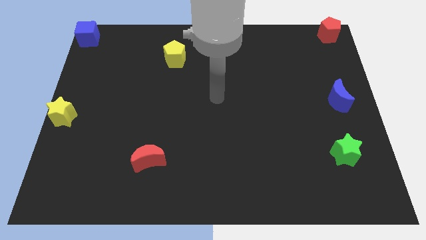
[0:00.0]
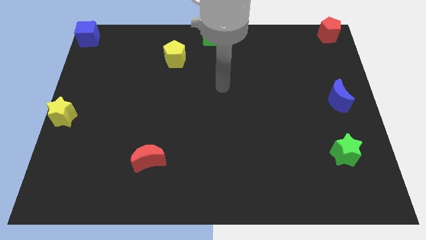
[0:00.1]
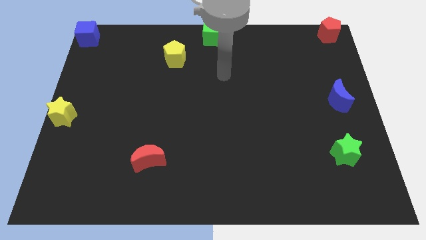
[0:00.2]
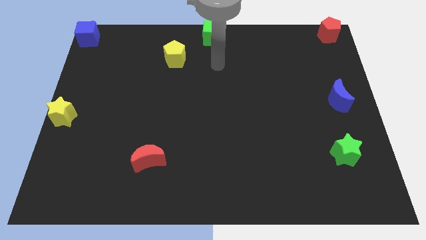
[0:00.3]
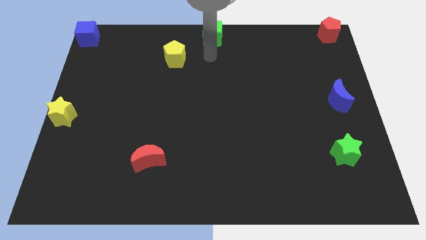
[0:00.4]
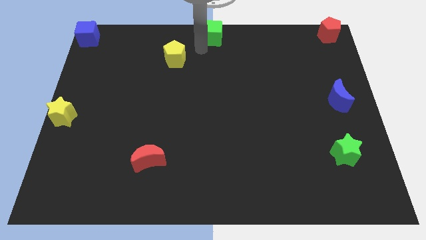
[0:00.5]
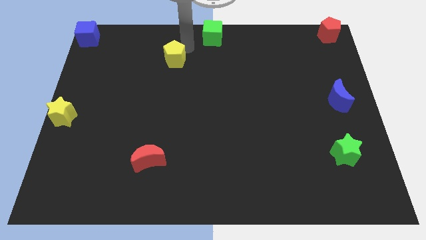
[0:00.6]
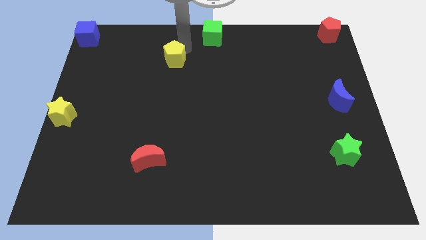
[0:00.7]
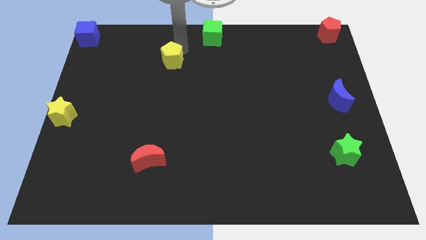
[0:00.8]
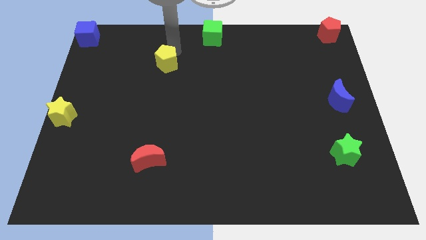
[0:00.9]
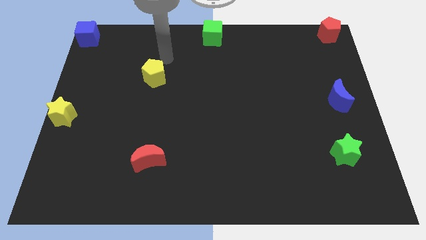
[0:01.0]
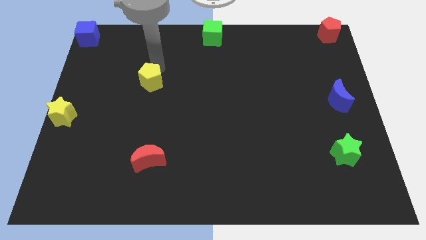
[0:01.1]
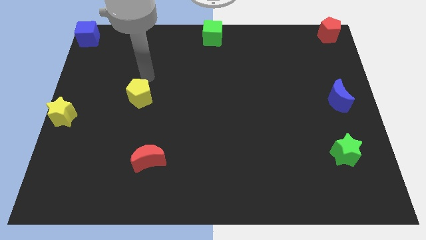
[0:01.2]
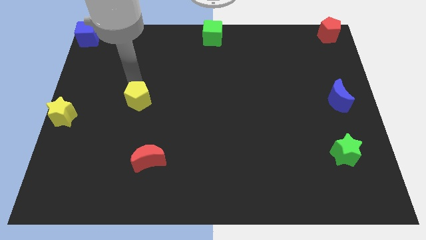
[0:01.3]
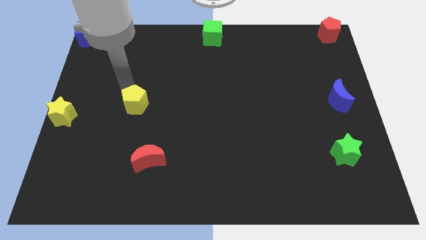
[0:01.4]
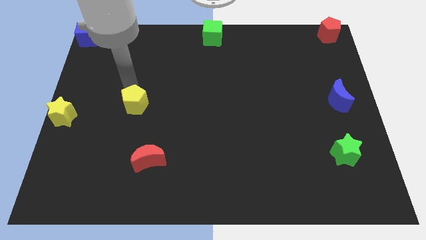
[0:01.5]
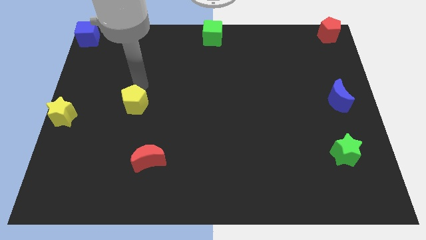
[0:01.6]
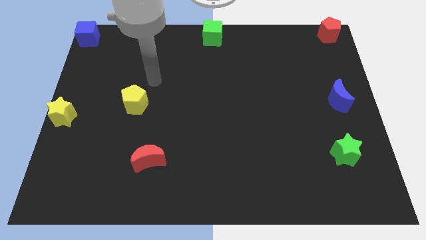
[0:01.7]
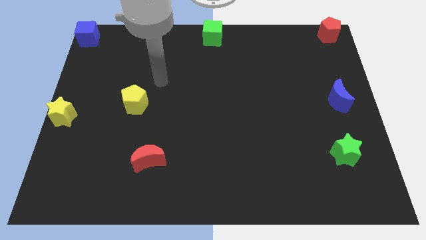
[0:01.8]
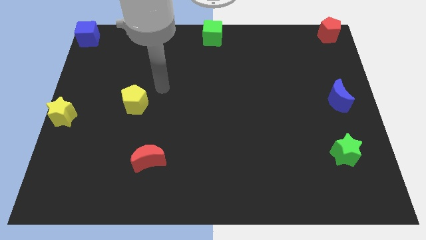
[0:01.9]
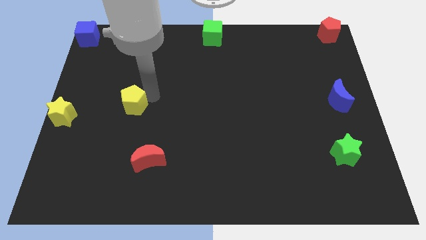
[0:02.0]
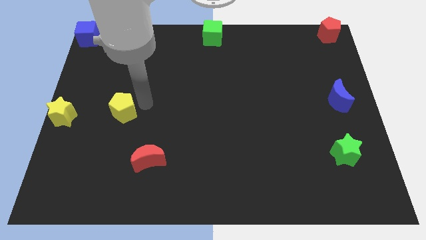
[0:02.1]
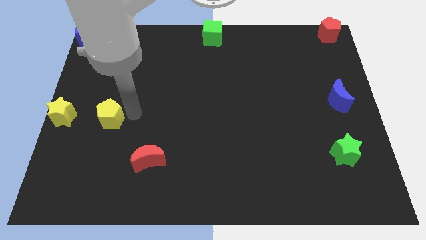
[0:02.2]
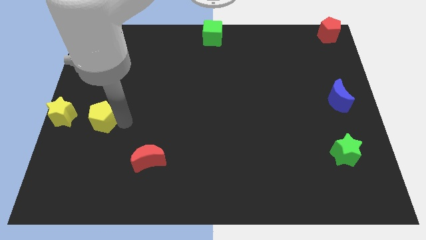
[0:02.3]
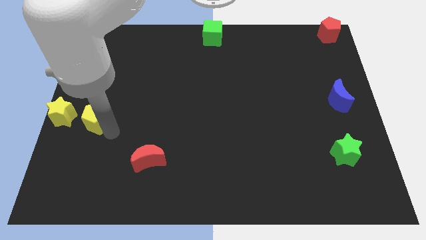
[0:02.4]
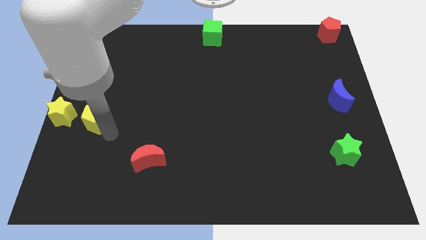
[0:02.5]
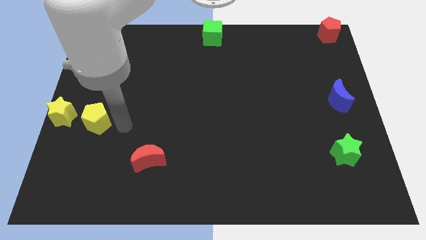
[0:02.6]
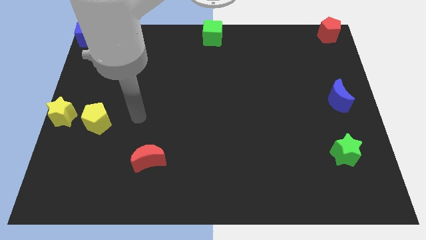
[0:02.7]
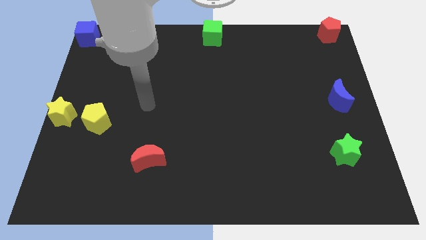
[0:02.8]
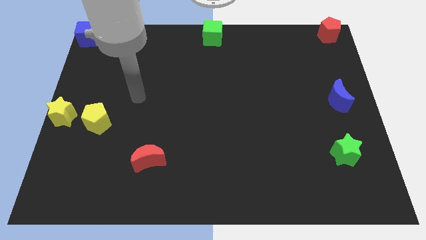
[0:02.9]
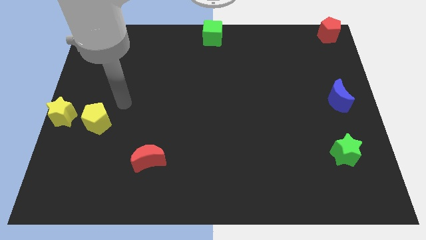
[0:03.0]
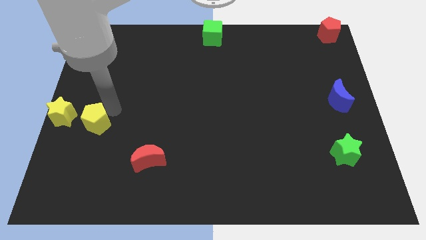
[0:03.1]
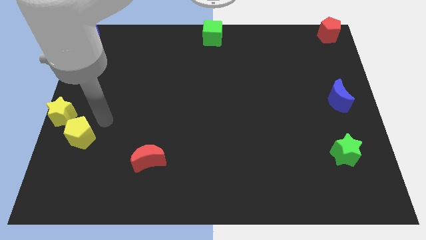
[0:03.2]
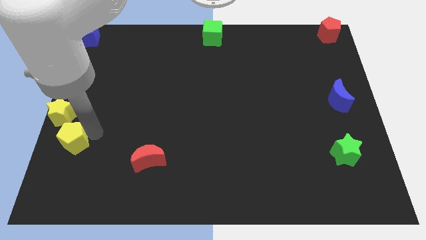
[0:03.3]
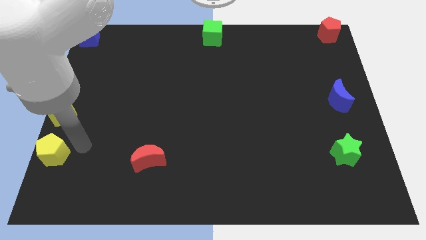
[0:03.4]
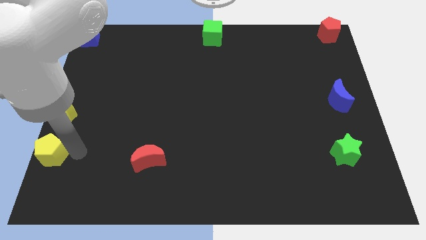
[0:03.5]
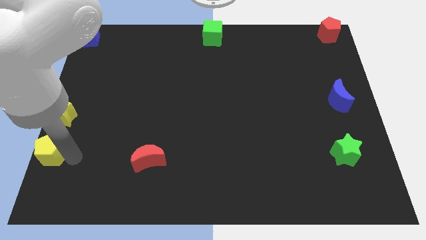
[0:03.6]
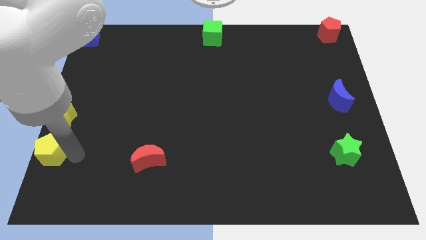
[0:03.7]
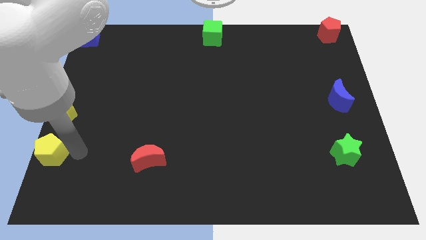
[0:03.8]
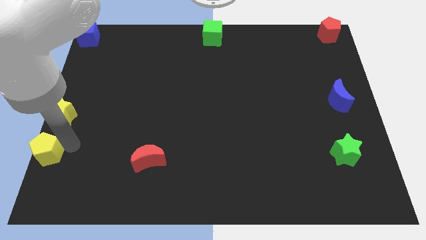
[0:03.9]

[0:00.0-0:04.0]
move the yellow pentagon below the yellow star

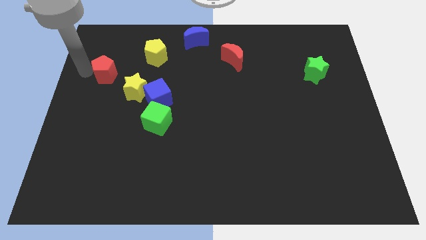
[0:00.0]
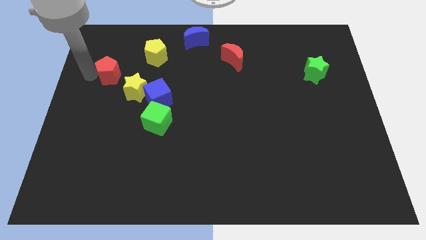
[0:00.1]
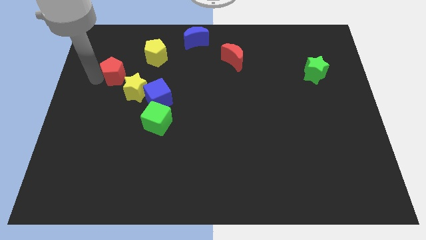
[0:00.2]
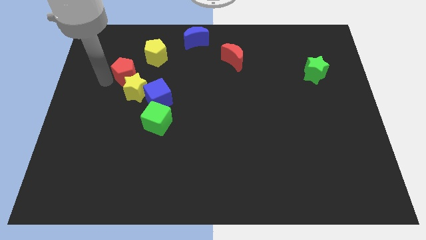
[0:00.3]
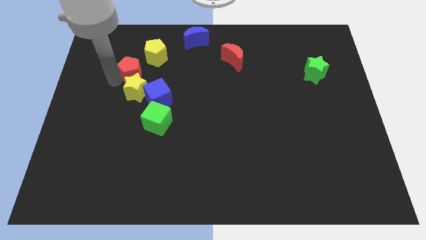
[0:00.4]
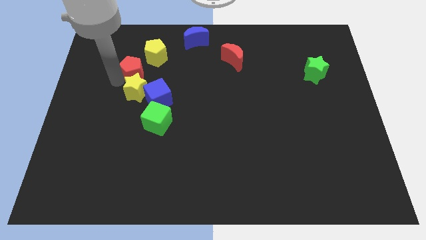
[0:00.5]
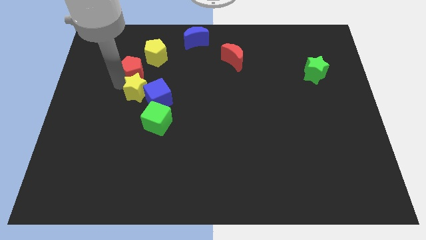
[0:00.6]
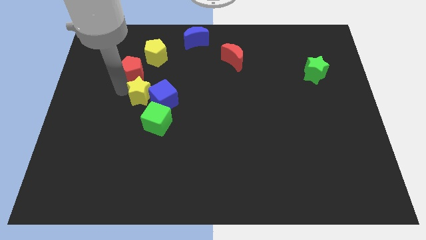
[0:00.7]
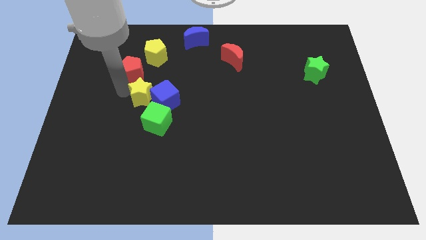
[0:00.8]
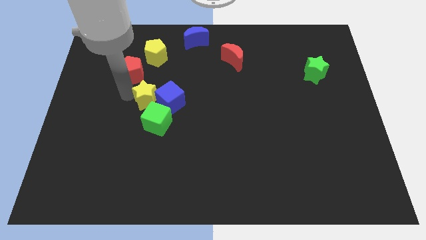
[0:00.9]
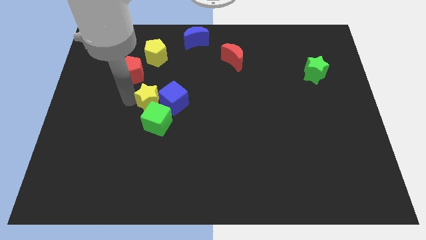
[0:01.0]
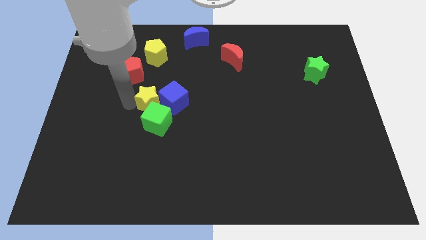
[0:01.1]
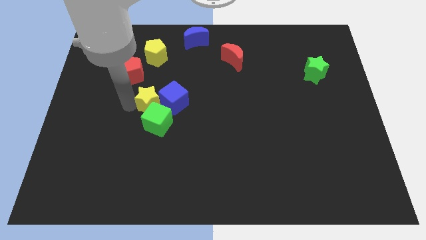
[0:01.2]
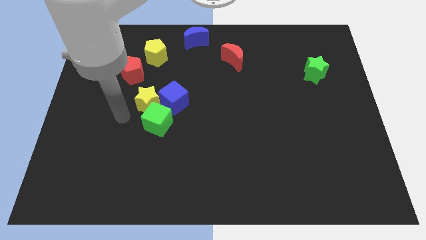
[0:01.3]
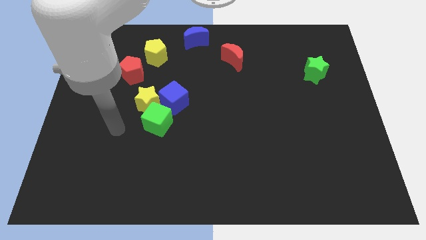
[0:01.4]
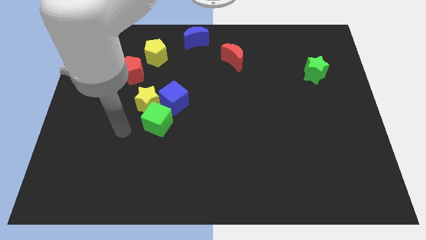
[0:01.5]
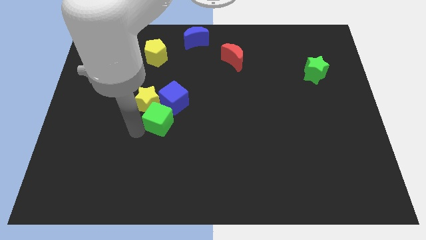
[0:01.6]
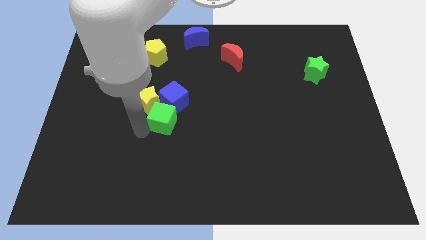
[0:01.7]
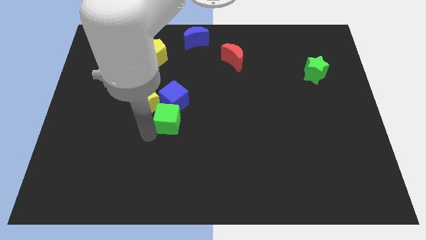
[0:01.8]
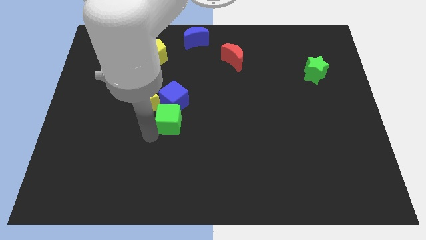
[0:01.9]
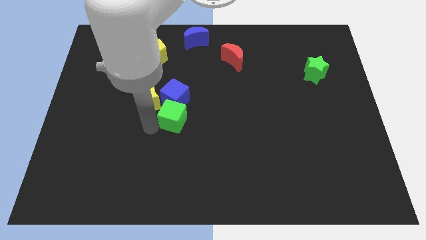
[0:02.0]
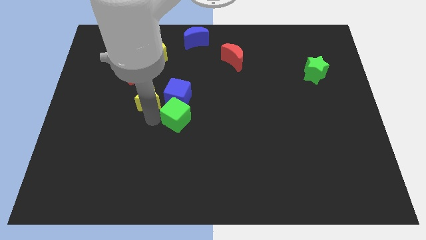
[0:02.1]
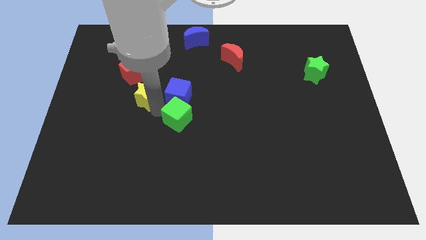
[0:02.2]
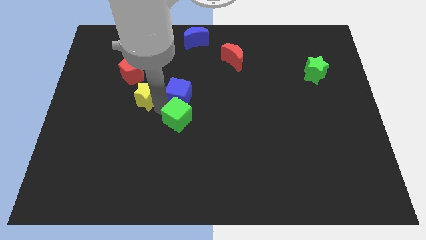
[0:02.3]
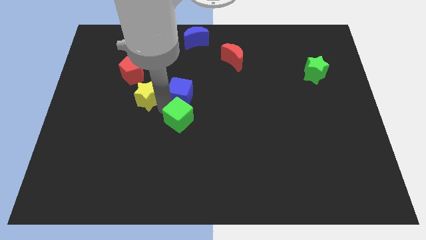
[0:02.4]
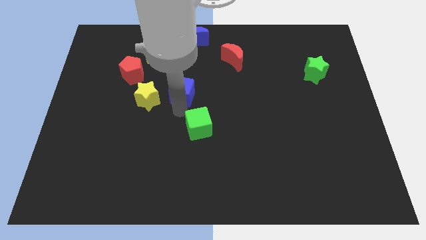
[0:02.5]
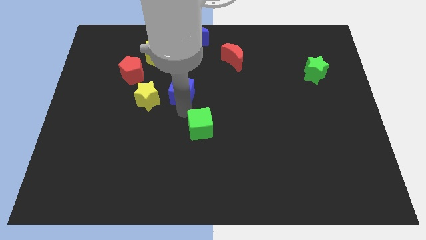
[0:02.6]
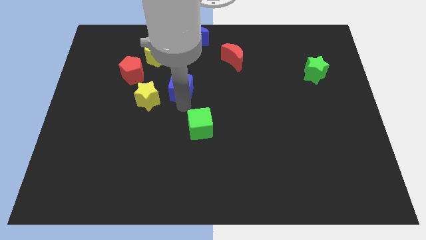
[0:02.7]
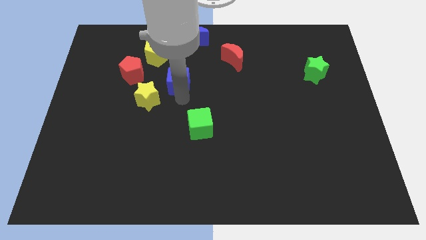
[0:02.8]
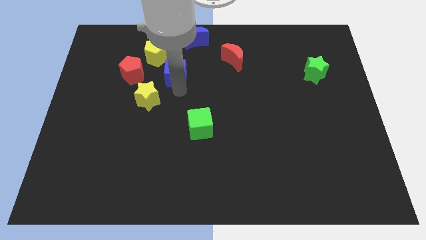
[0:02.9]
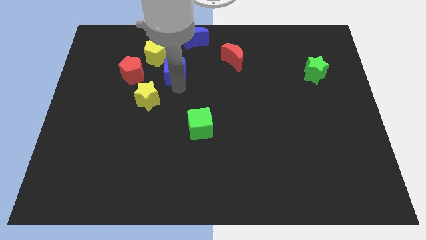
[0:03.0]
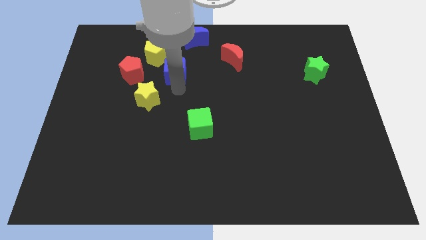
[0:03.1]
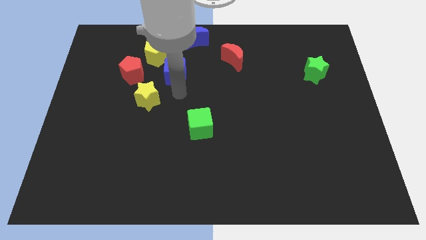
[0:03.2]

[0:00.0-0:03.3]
separate the group of blocks below yellow penatgon

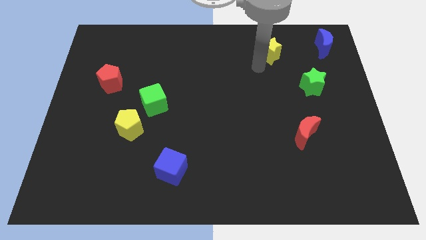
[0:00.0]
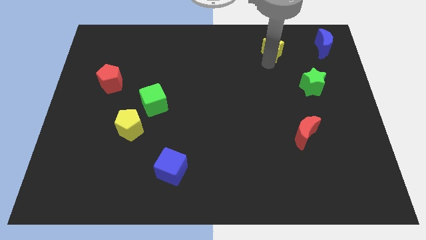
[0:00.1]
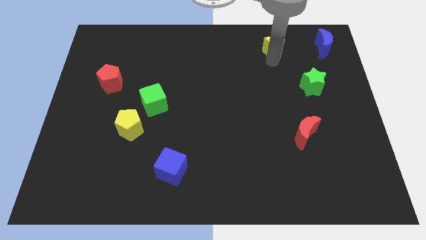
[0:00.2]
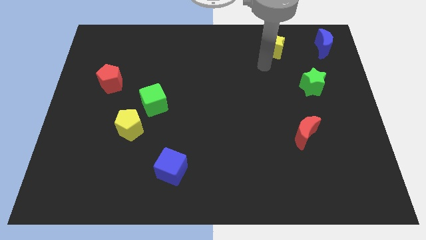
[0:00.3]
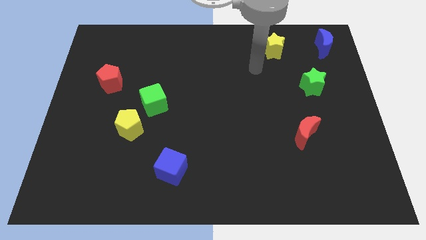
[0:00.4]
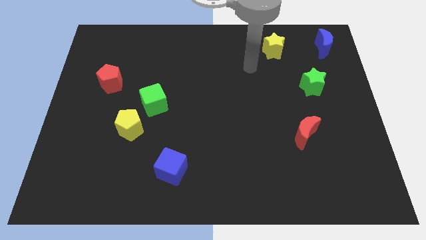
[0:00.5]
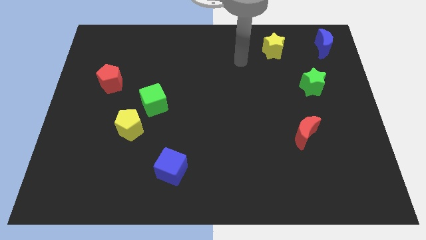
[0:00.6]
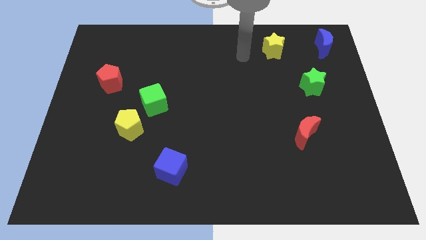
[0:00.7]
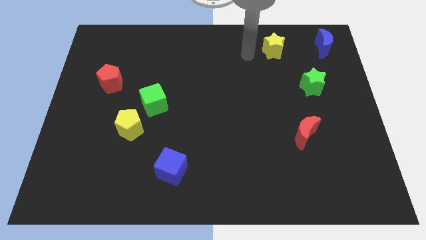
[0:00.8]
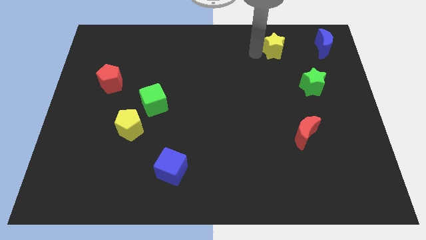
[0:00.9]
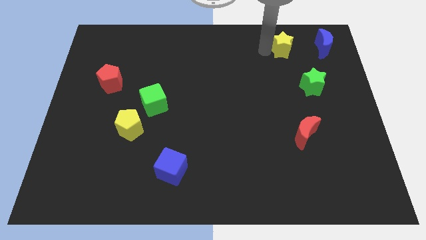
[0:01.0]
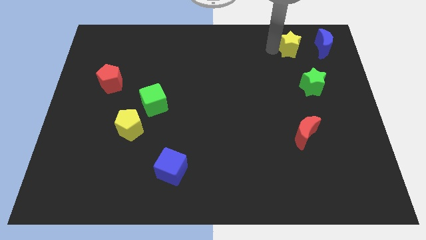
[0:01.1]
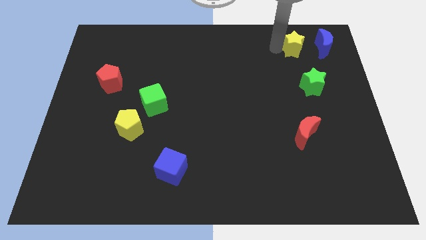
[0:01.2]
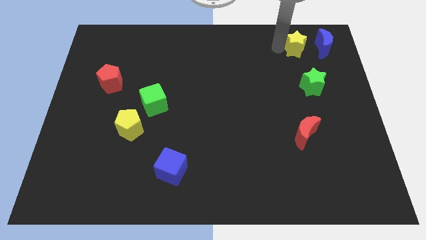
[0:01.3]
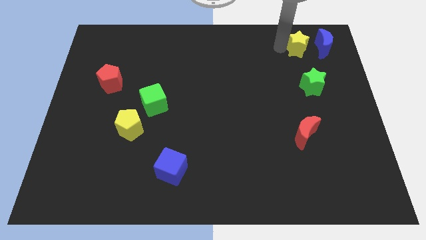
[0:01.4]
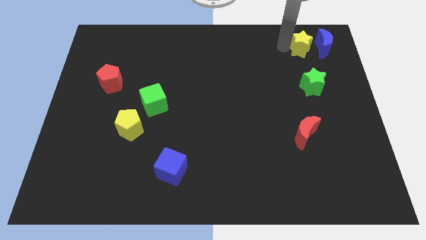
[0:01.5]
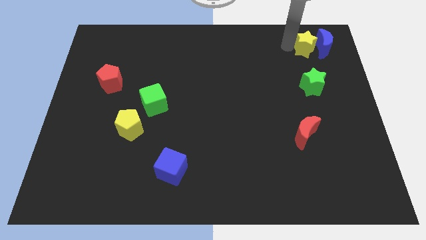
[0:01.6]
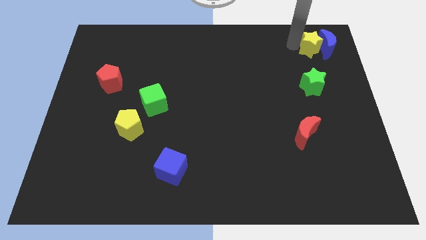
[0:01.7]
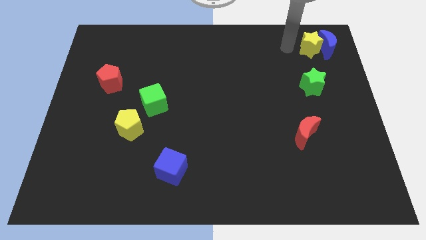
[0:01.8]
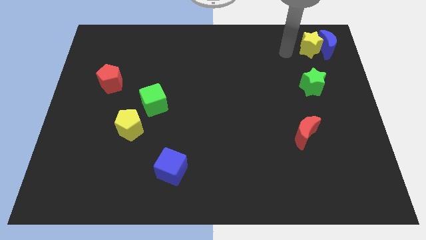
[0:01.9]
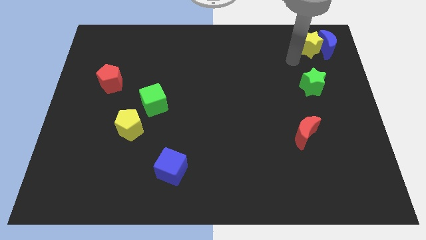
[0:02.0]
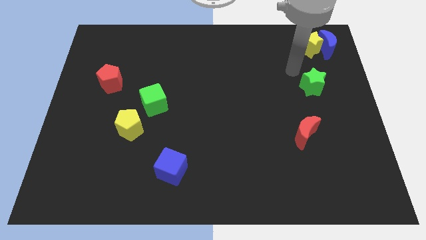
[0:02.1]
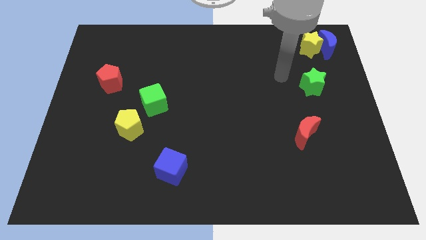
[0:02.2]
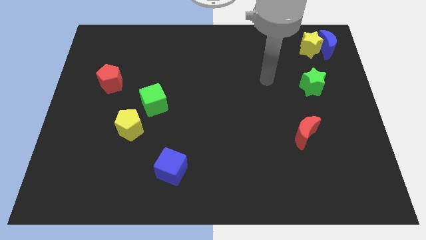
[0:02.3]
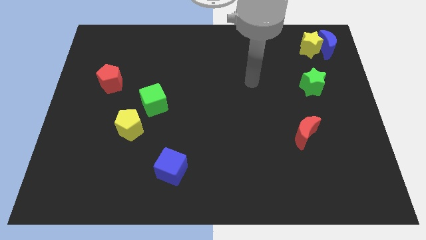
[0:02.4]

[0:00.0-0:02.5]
place yellow star near blue crescent
